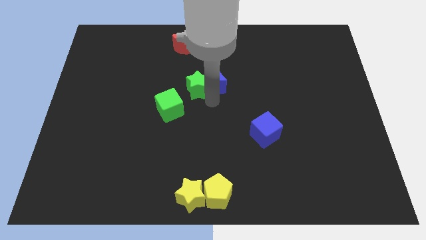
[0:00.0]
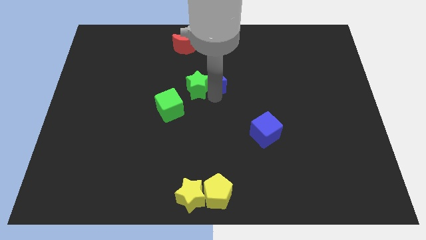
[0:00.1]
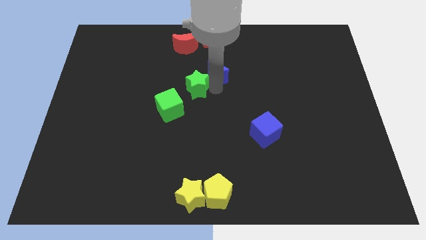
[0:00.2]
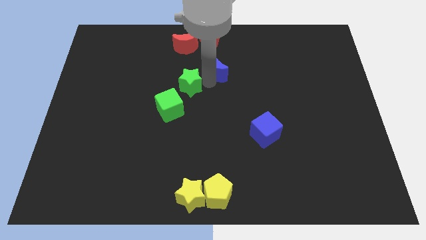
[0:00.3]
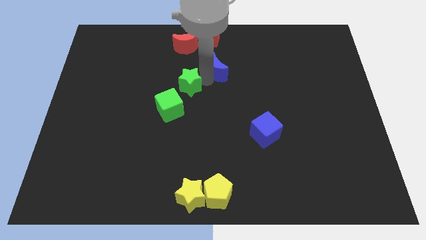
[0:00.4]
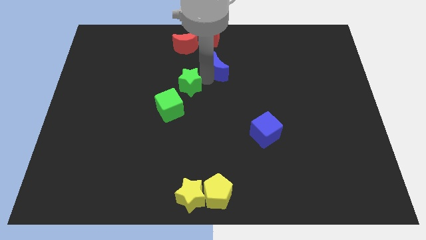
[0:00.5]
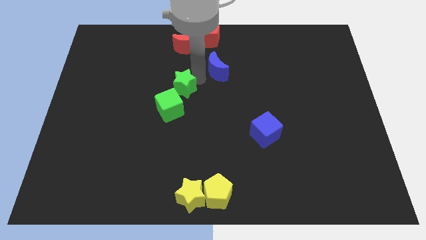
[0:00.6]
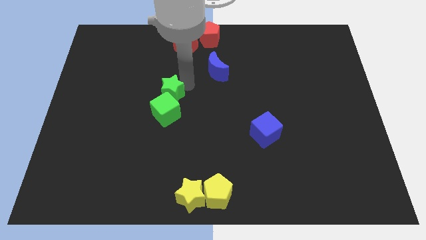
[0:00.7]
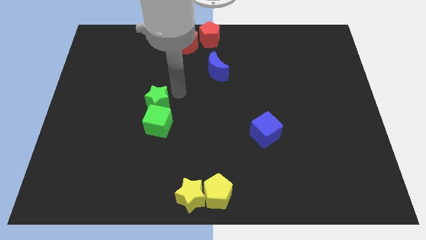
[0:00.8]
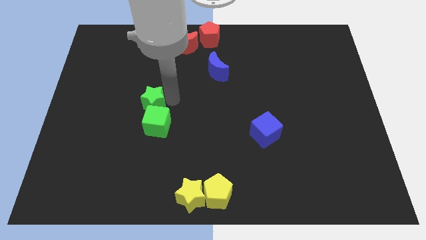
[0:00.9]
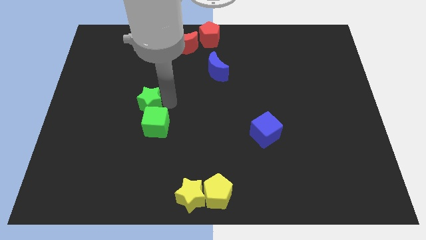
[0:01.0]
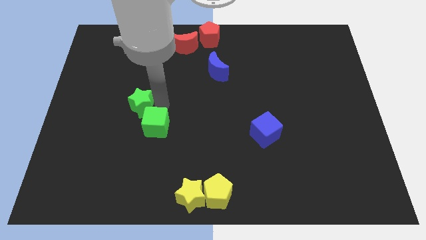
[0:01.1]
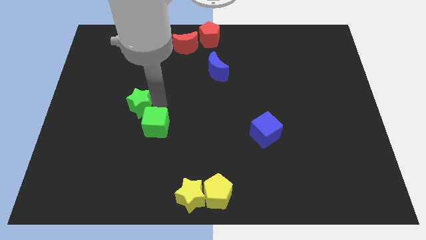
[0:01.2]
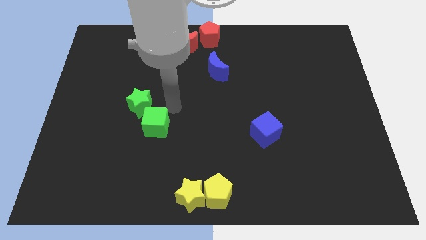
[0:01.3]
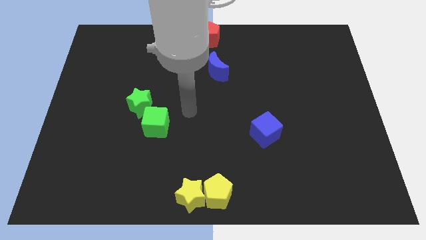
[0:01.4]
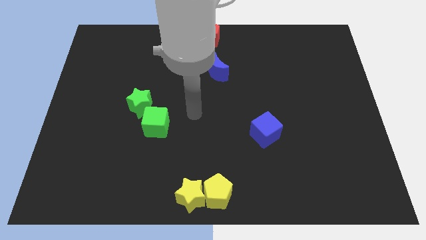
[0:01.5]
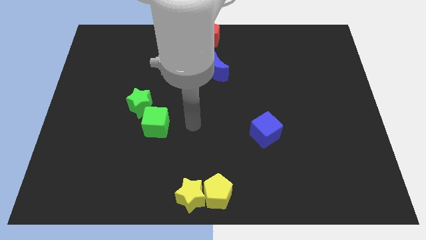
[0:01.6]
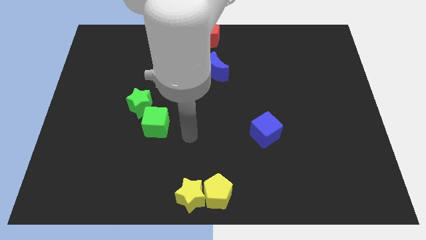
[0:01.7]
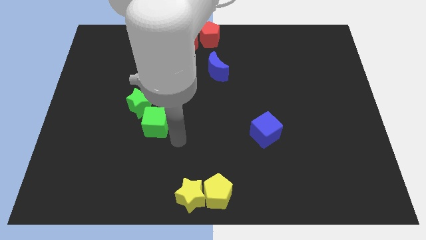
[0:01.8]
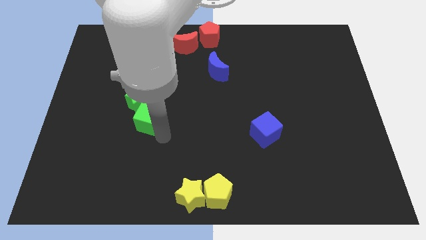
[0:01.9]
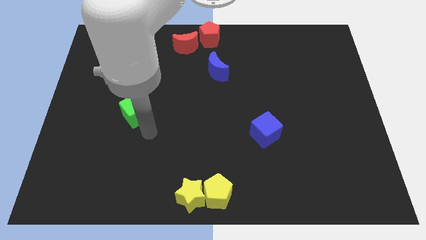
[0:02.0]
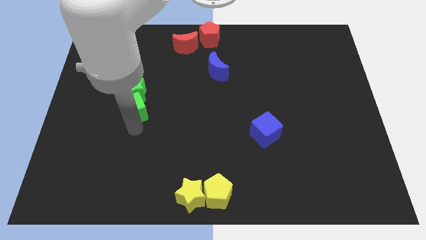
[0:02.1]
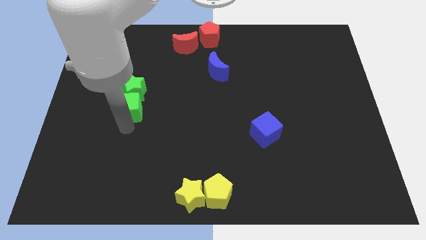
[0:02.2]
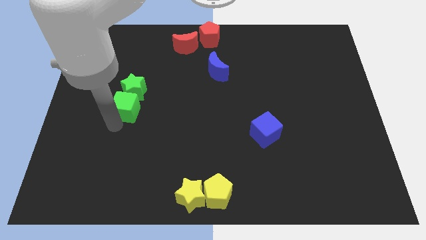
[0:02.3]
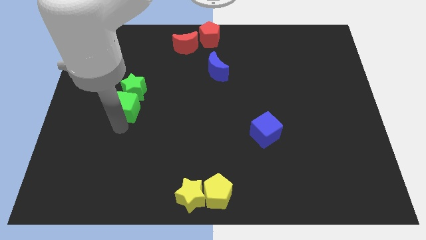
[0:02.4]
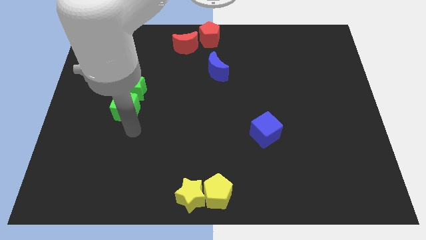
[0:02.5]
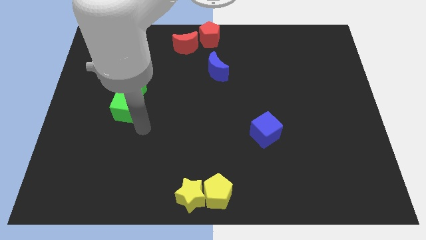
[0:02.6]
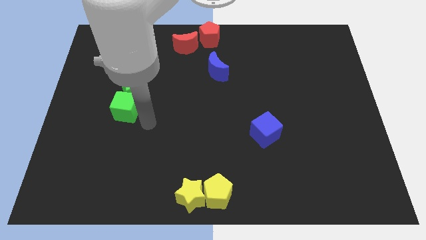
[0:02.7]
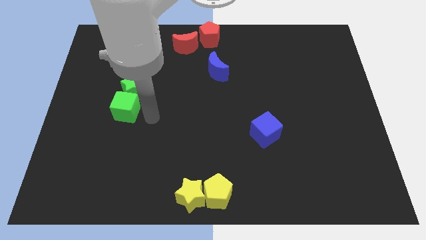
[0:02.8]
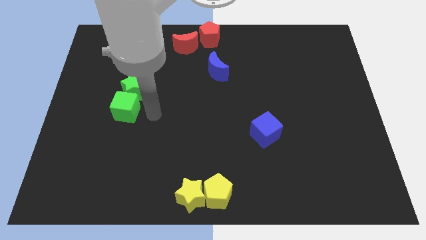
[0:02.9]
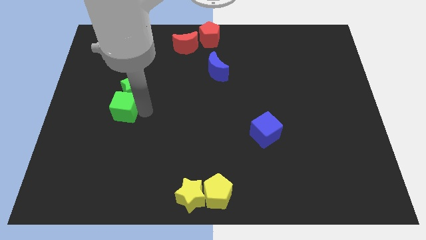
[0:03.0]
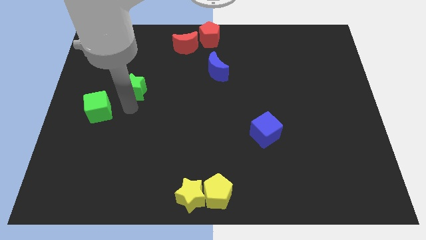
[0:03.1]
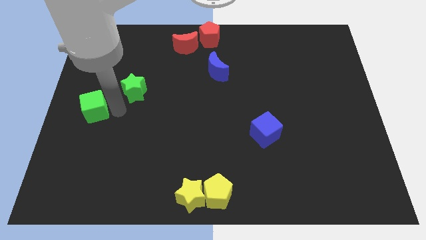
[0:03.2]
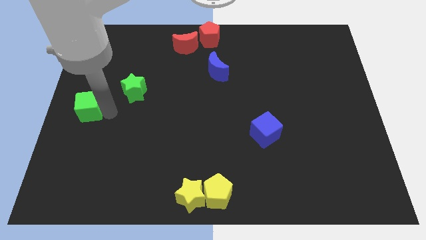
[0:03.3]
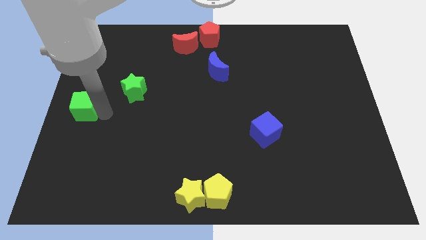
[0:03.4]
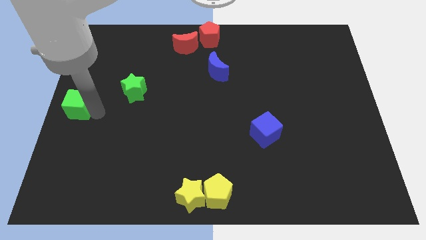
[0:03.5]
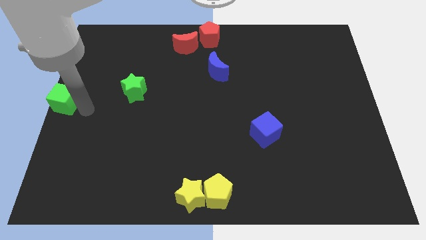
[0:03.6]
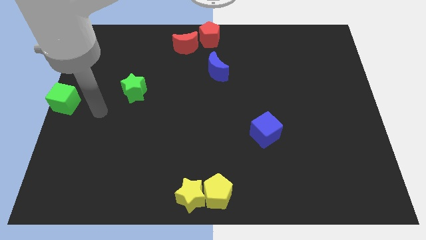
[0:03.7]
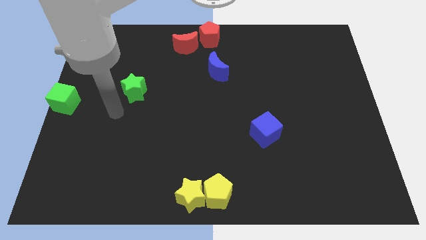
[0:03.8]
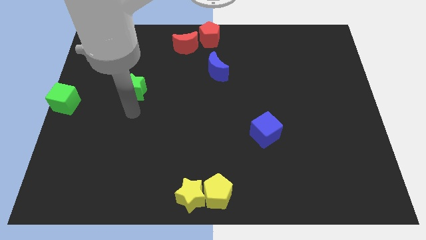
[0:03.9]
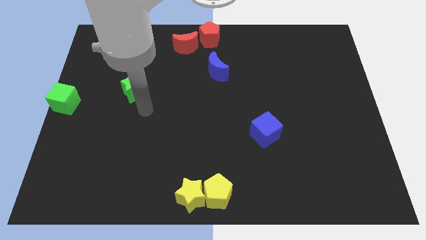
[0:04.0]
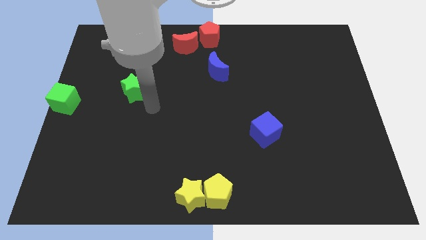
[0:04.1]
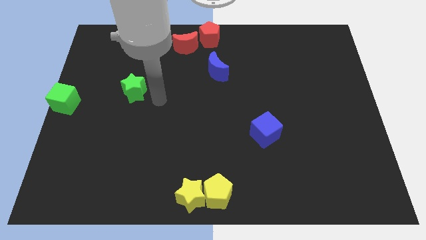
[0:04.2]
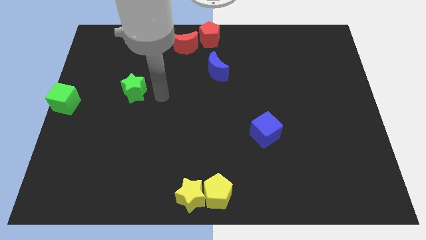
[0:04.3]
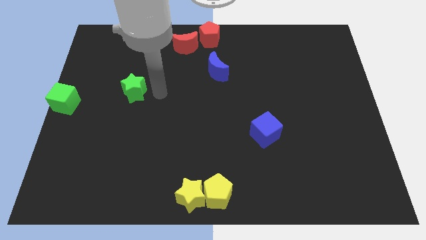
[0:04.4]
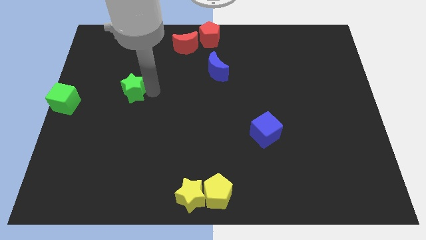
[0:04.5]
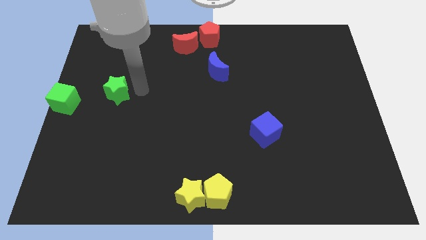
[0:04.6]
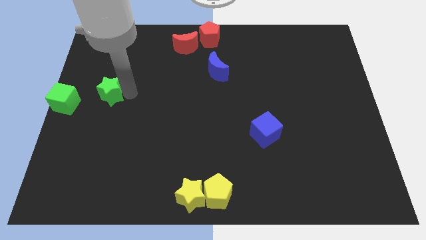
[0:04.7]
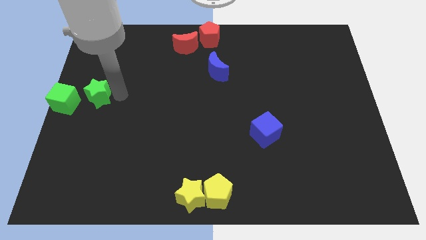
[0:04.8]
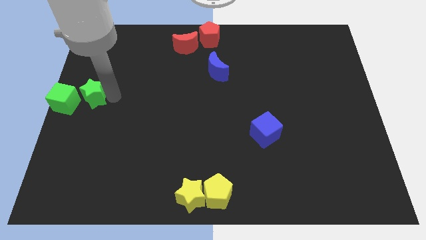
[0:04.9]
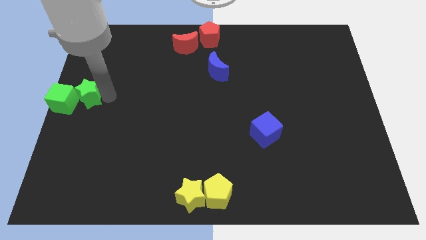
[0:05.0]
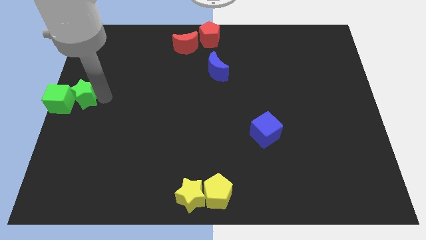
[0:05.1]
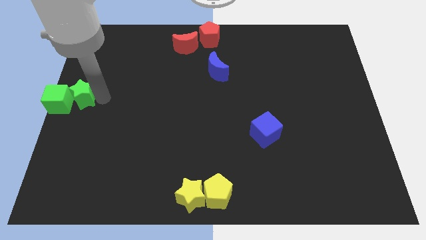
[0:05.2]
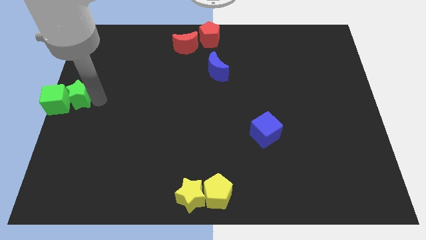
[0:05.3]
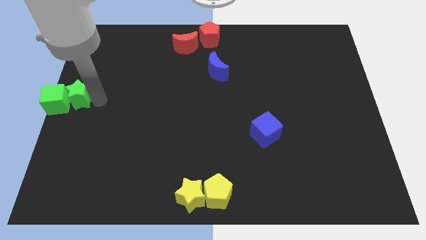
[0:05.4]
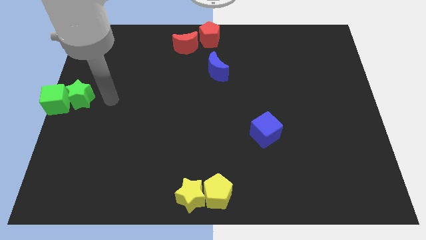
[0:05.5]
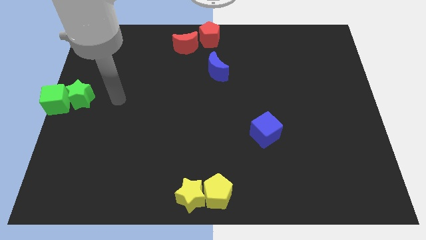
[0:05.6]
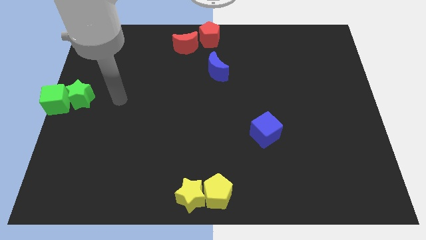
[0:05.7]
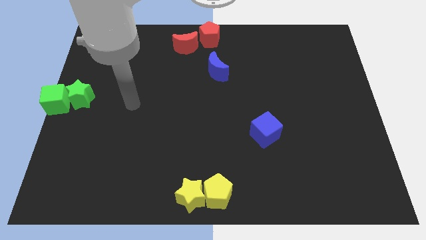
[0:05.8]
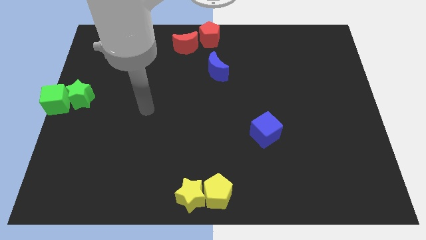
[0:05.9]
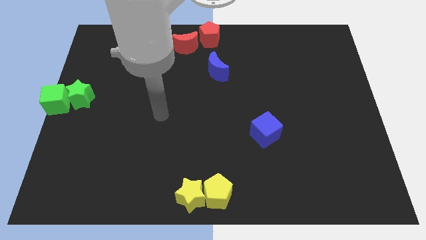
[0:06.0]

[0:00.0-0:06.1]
separate blue moon from green star

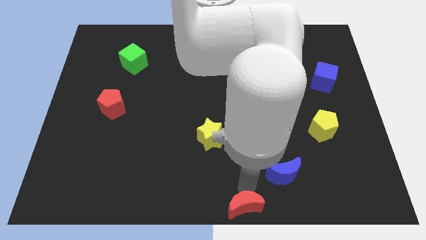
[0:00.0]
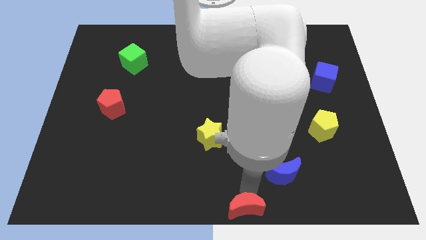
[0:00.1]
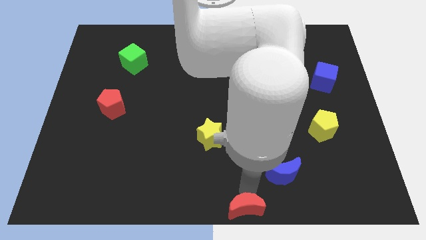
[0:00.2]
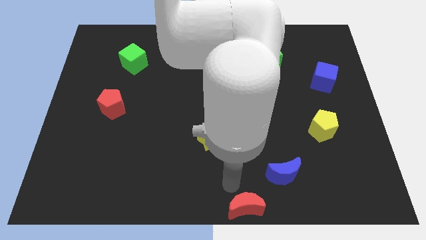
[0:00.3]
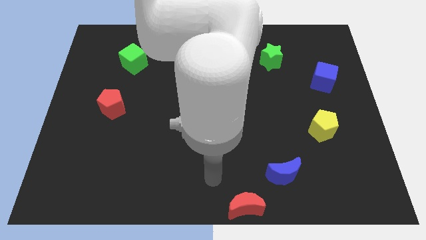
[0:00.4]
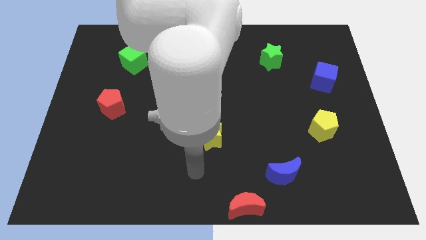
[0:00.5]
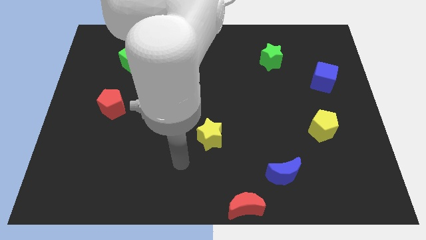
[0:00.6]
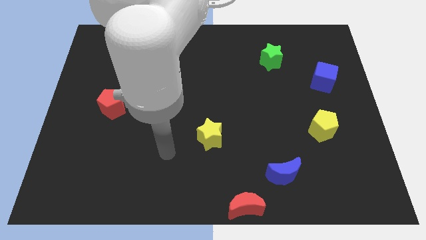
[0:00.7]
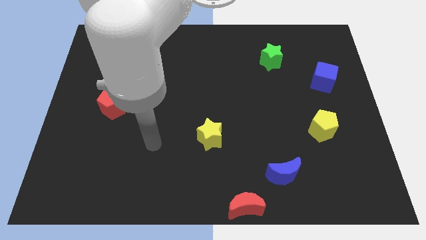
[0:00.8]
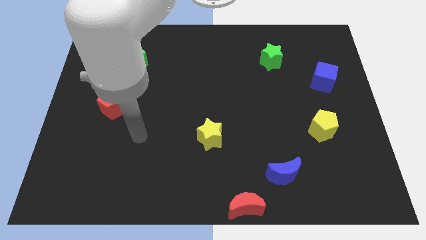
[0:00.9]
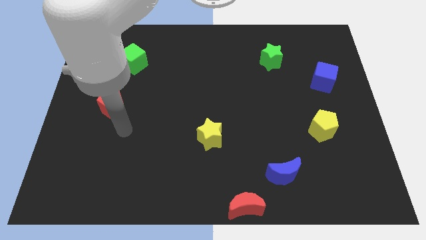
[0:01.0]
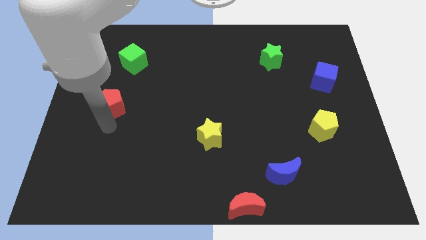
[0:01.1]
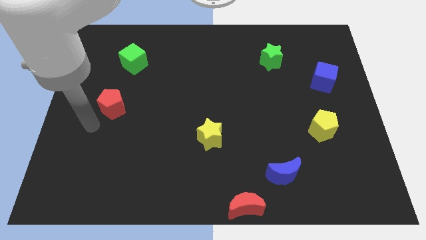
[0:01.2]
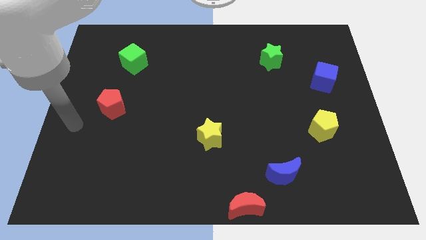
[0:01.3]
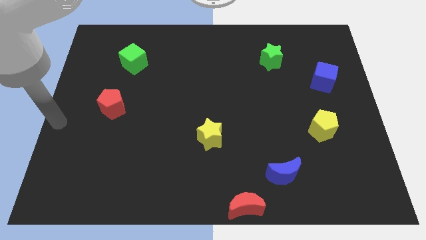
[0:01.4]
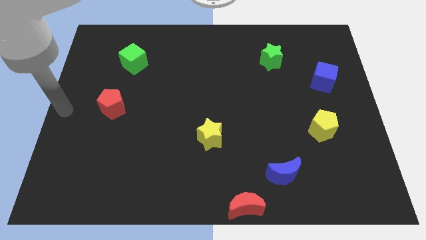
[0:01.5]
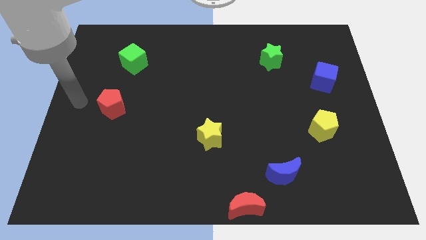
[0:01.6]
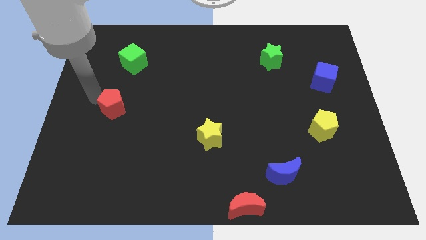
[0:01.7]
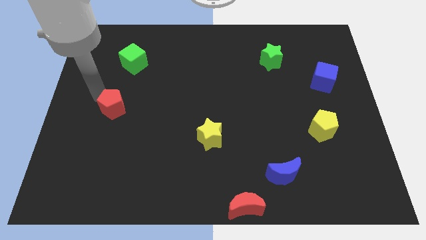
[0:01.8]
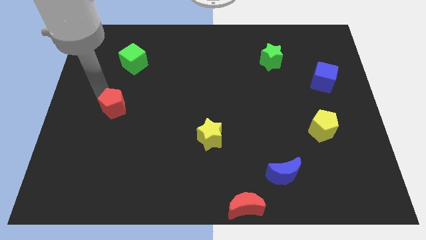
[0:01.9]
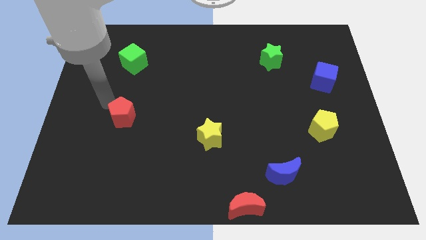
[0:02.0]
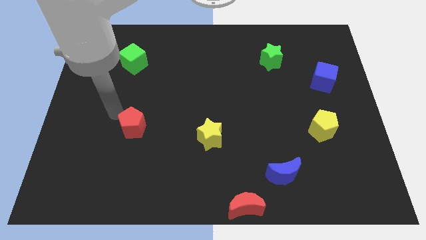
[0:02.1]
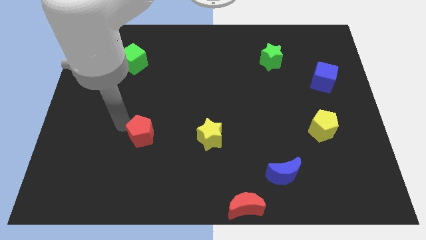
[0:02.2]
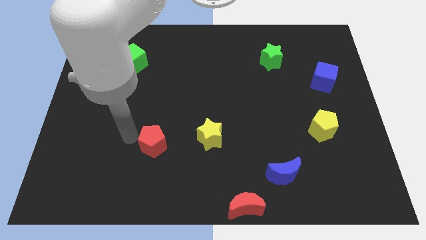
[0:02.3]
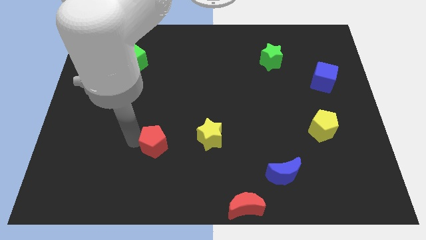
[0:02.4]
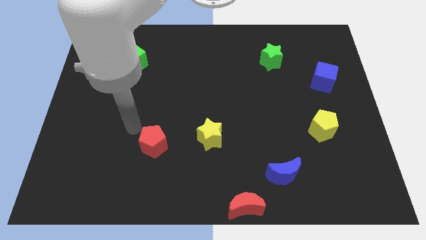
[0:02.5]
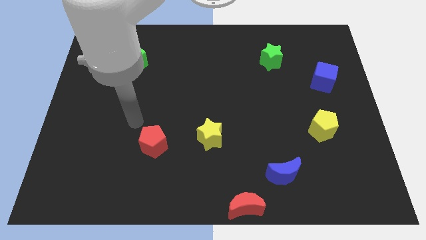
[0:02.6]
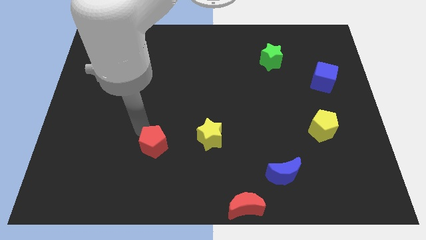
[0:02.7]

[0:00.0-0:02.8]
put the red pentagon to the left of the yellow star

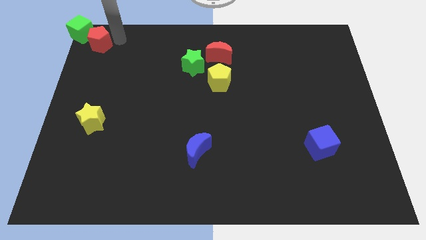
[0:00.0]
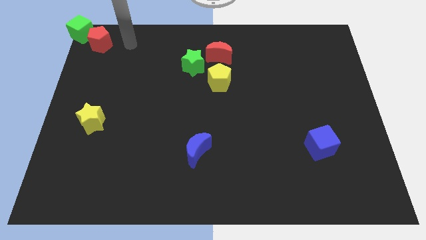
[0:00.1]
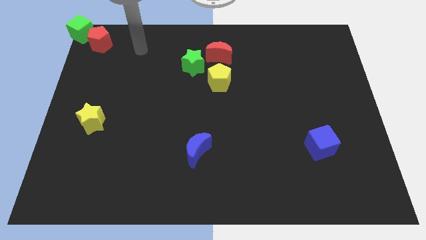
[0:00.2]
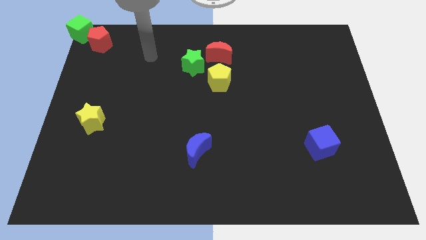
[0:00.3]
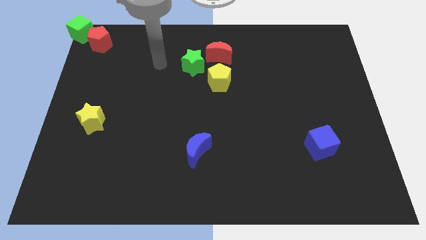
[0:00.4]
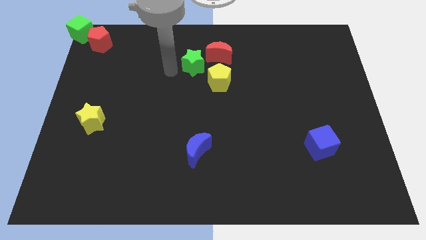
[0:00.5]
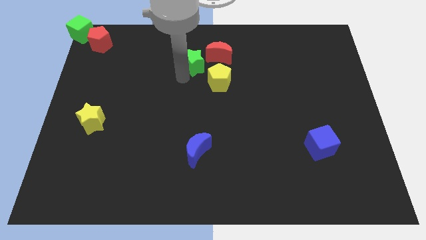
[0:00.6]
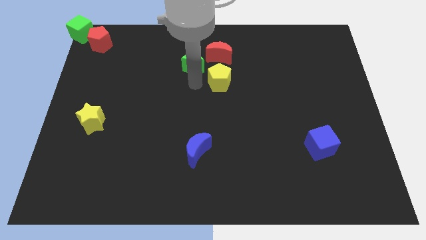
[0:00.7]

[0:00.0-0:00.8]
move your arm to the left side of yellow pentagon
